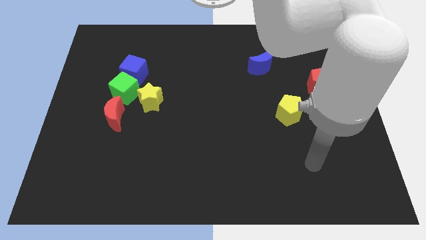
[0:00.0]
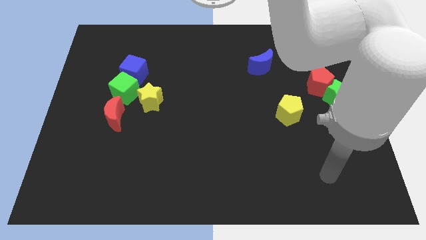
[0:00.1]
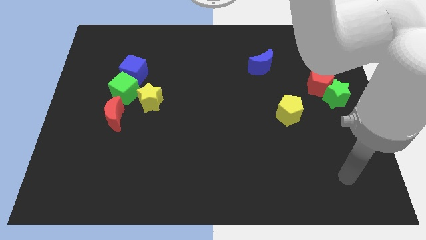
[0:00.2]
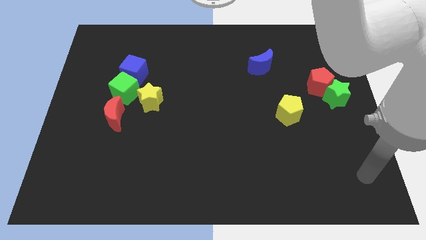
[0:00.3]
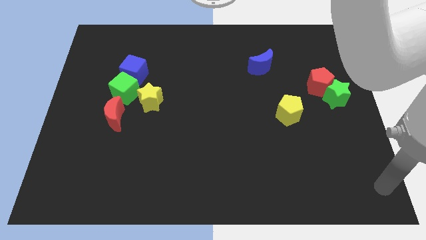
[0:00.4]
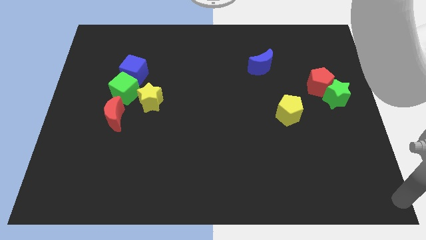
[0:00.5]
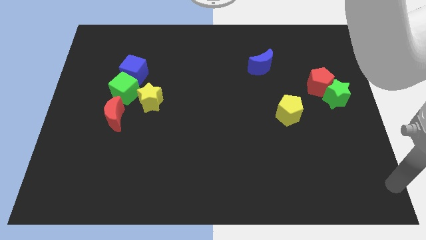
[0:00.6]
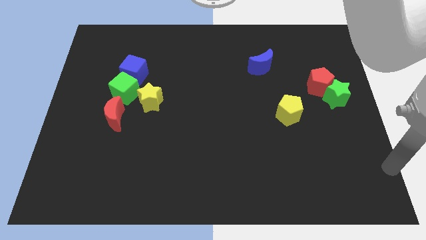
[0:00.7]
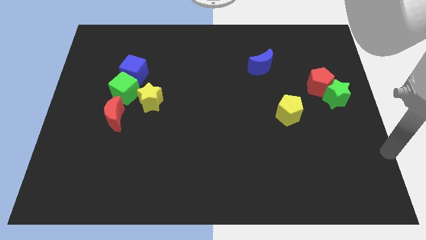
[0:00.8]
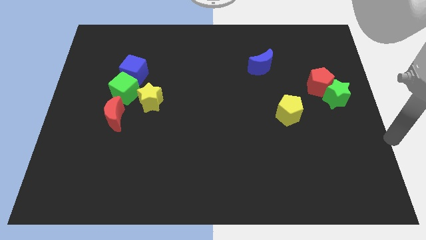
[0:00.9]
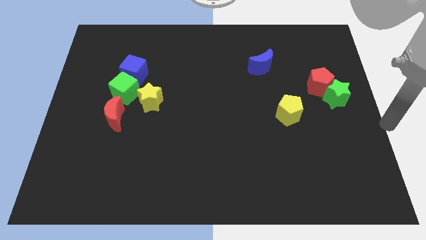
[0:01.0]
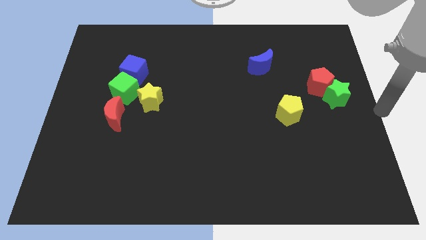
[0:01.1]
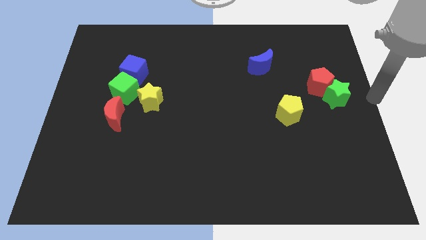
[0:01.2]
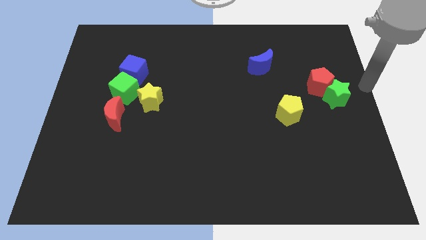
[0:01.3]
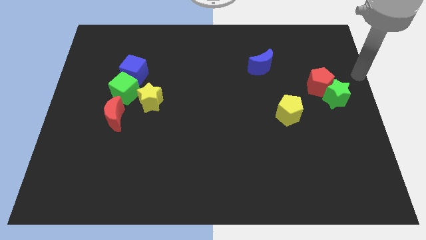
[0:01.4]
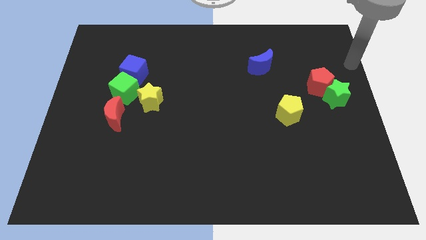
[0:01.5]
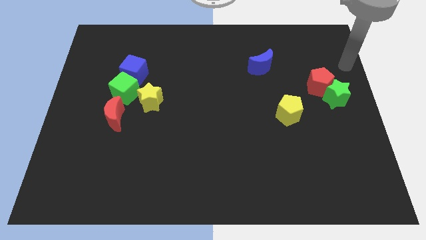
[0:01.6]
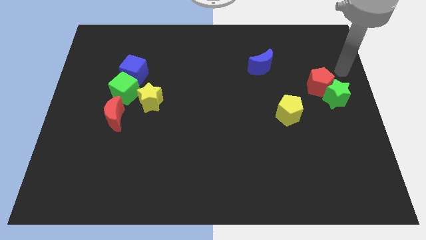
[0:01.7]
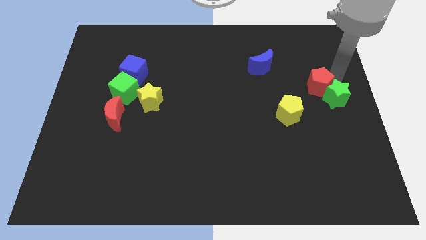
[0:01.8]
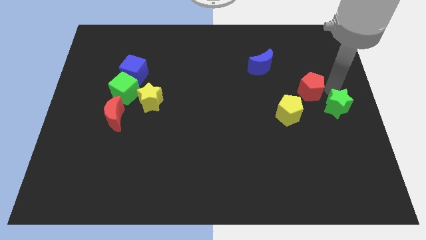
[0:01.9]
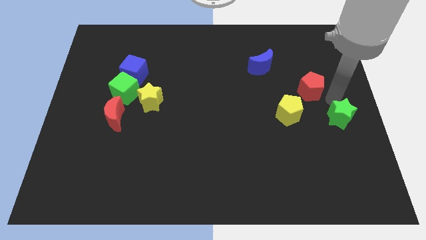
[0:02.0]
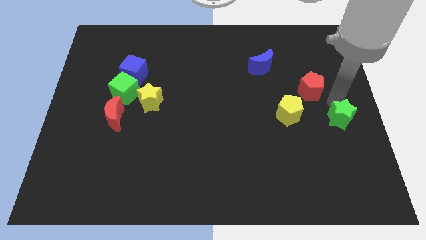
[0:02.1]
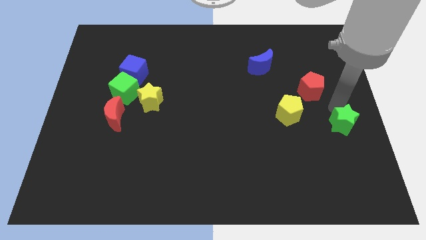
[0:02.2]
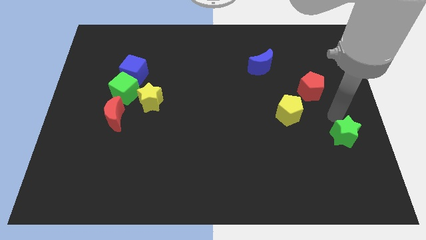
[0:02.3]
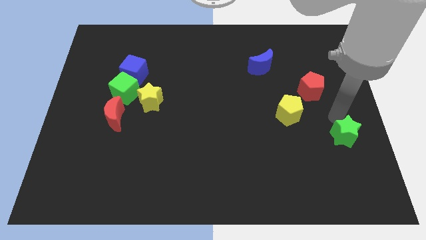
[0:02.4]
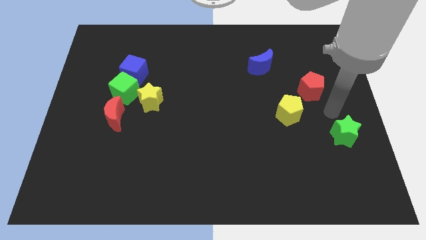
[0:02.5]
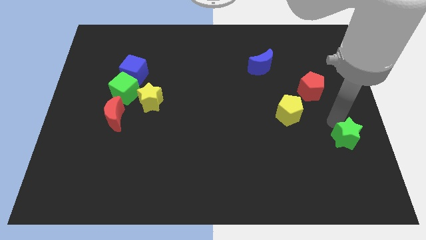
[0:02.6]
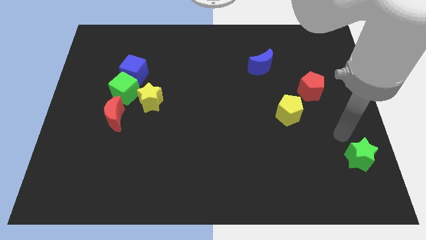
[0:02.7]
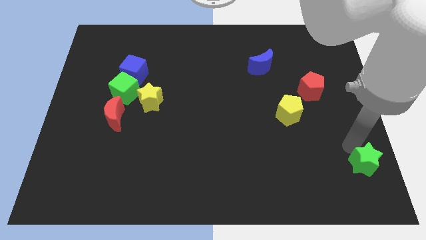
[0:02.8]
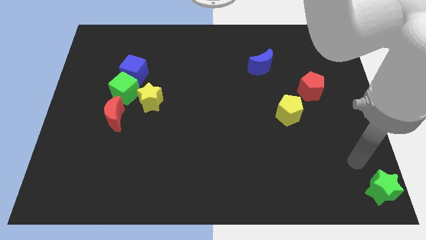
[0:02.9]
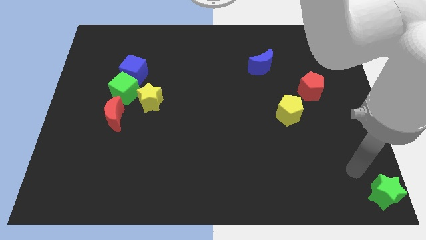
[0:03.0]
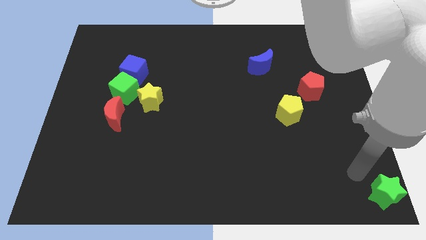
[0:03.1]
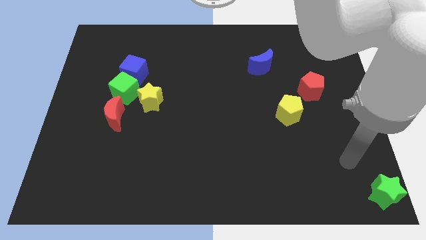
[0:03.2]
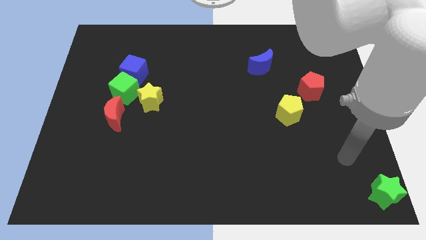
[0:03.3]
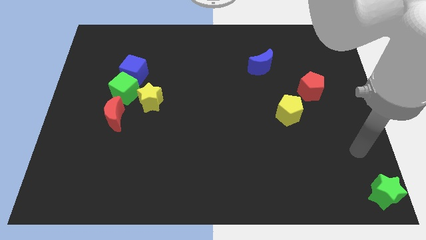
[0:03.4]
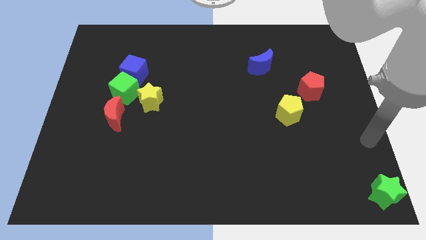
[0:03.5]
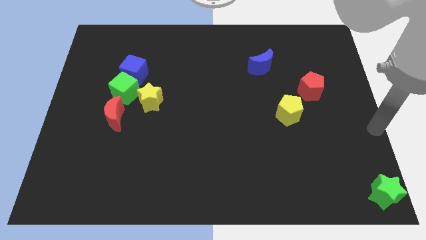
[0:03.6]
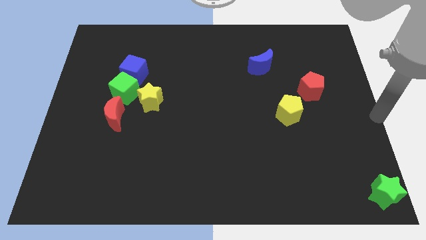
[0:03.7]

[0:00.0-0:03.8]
push the green star towards the bottom right corner of the board

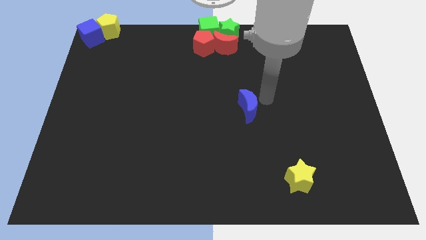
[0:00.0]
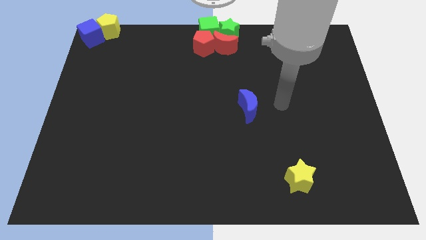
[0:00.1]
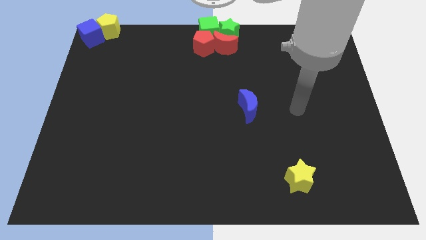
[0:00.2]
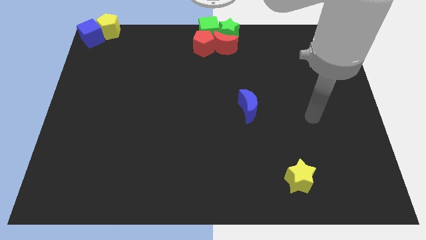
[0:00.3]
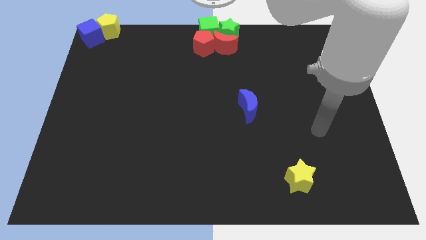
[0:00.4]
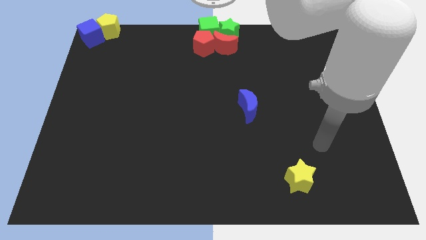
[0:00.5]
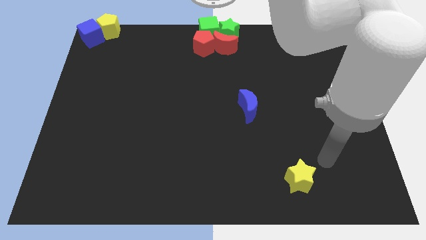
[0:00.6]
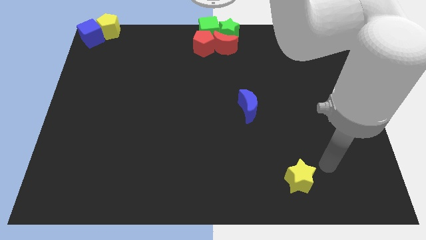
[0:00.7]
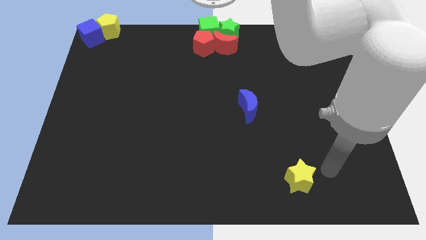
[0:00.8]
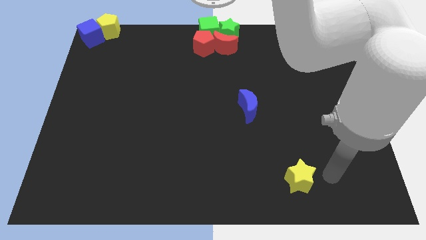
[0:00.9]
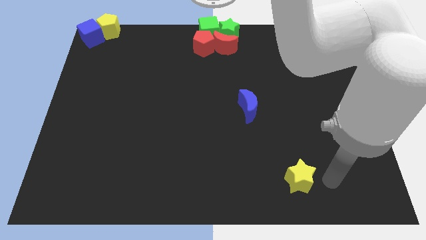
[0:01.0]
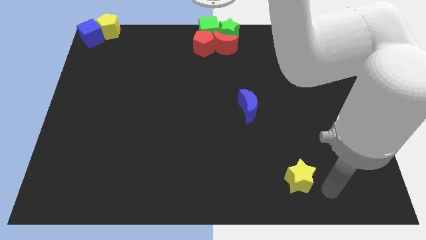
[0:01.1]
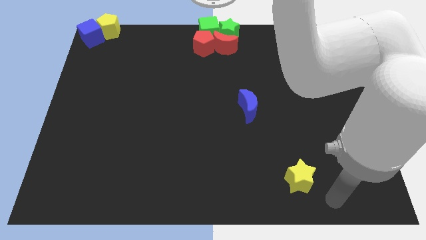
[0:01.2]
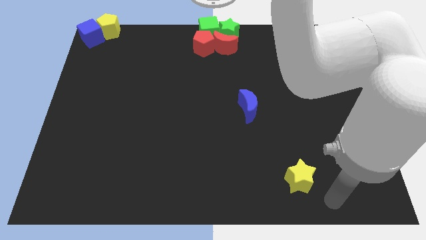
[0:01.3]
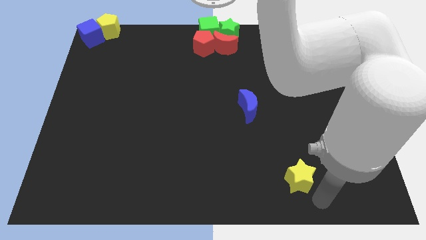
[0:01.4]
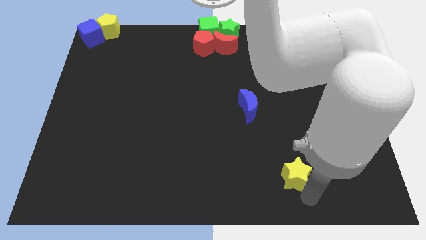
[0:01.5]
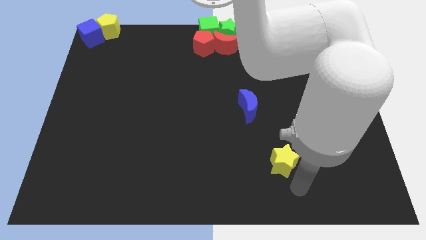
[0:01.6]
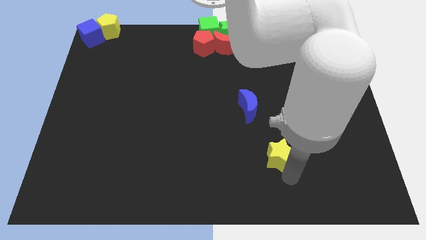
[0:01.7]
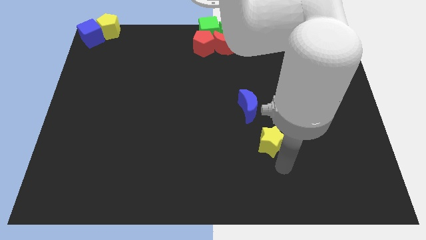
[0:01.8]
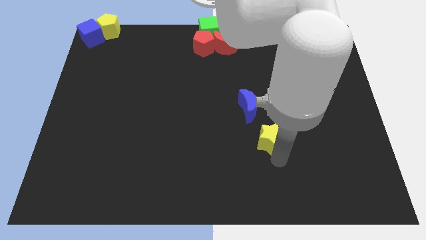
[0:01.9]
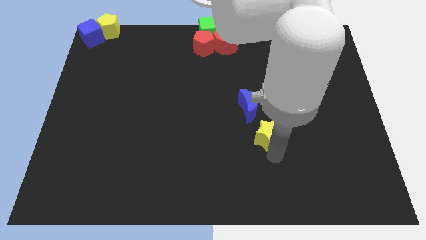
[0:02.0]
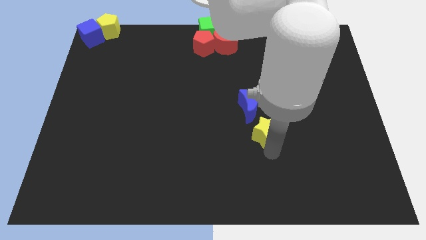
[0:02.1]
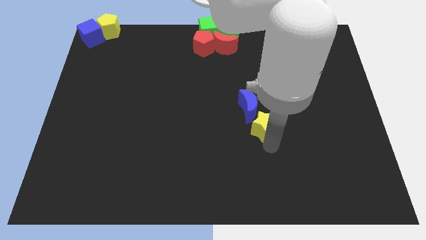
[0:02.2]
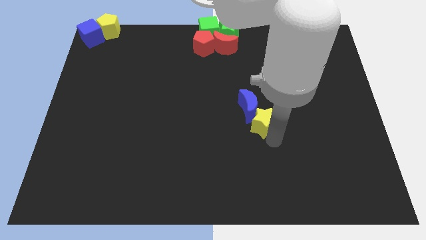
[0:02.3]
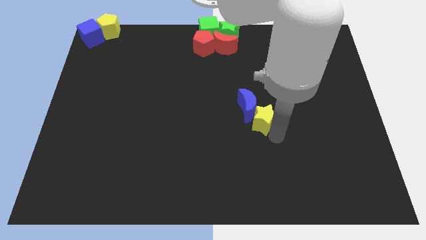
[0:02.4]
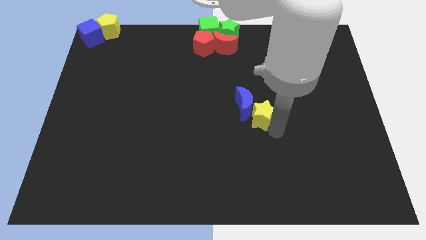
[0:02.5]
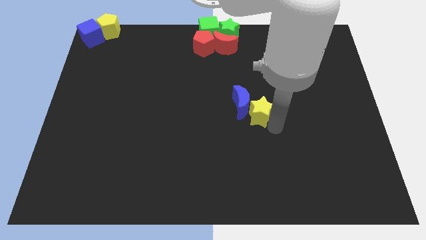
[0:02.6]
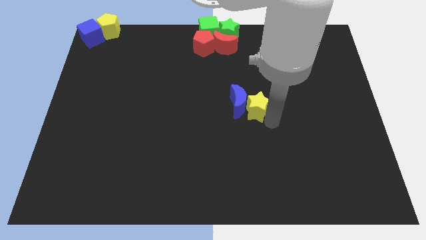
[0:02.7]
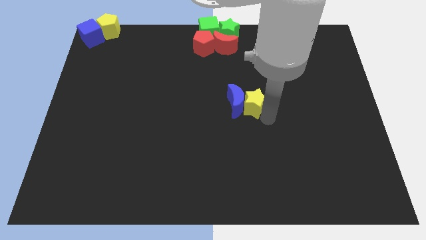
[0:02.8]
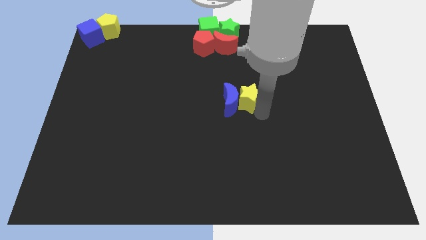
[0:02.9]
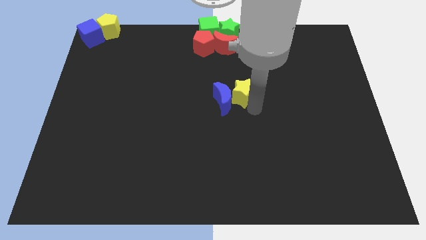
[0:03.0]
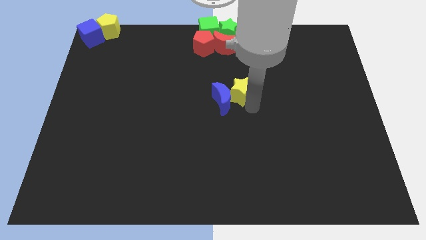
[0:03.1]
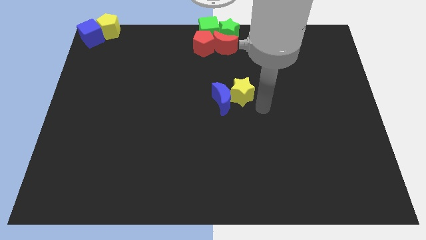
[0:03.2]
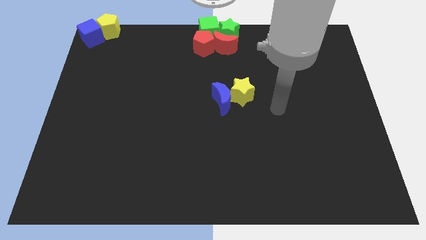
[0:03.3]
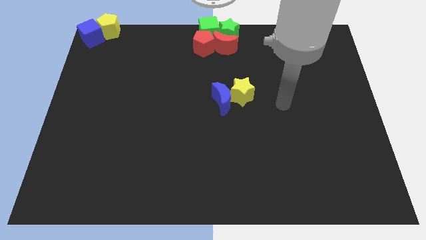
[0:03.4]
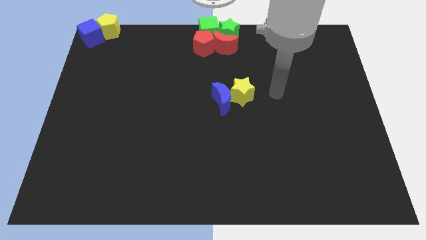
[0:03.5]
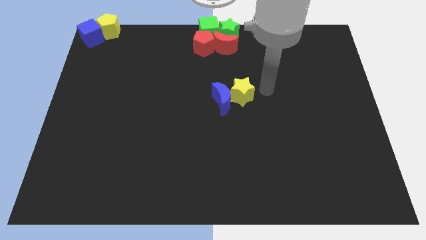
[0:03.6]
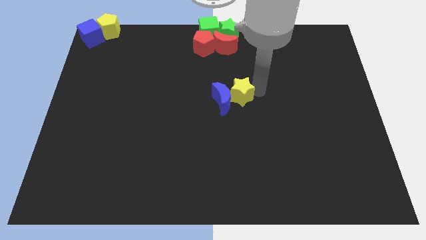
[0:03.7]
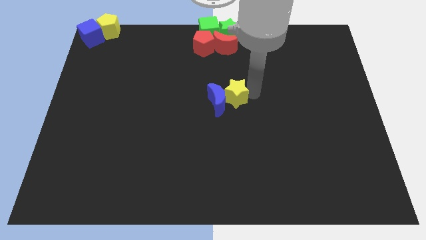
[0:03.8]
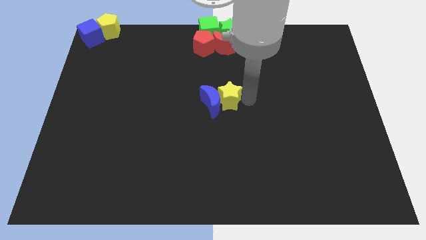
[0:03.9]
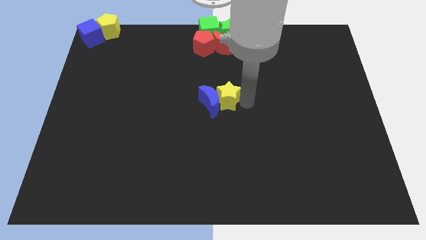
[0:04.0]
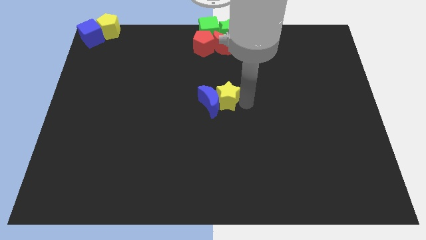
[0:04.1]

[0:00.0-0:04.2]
move the yellow star and blue crescent to the center of the board

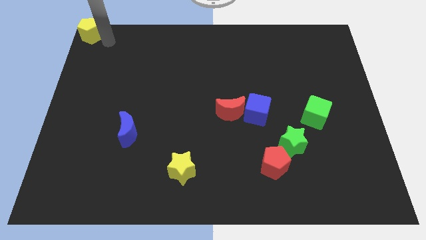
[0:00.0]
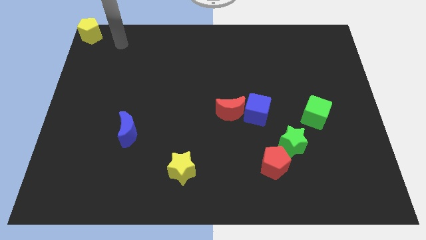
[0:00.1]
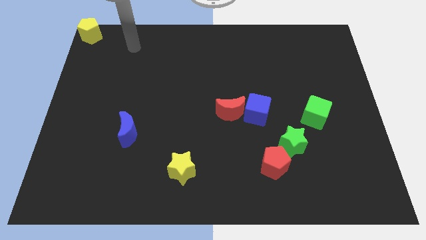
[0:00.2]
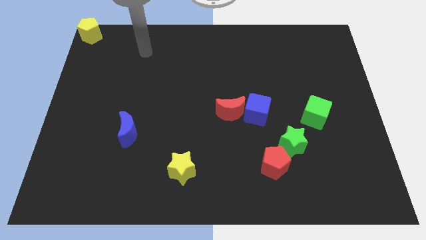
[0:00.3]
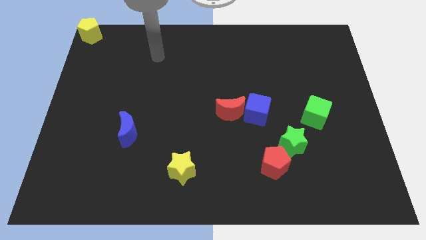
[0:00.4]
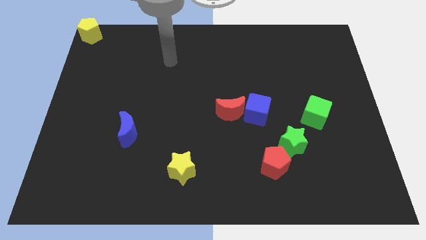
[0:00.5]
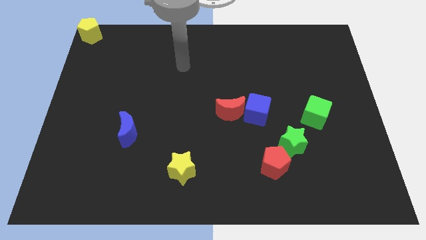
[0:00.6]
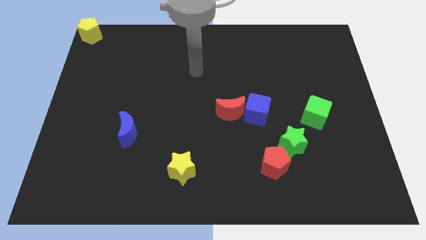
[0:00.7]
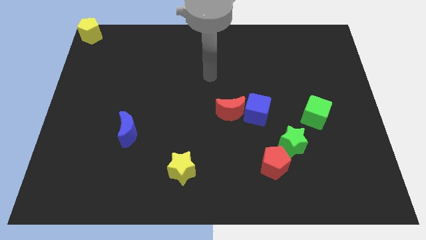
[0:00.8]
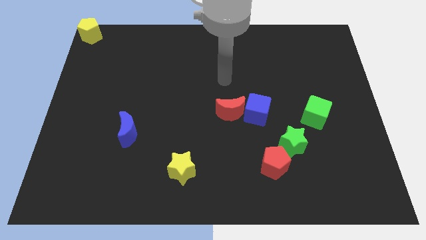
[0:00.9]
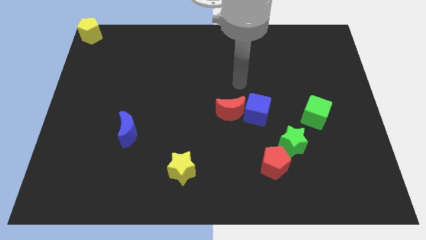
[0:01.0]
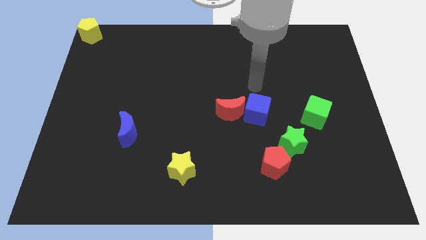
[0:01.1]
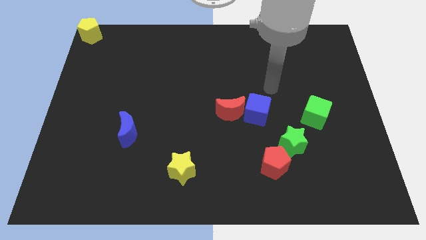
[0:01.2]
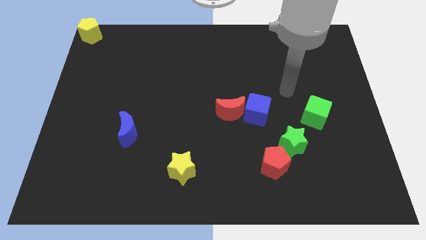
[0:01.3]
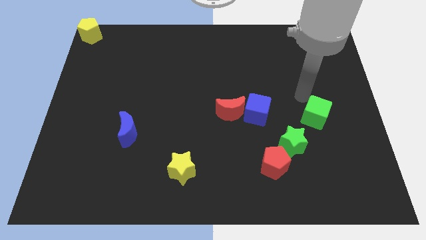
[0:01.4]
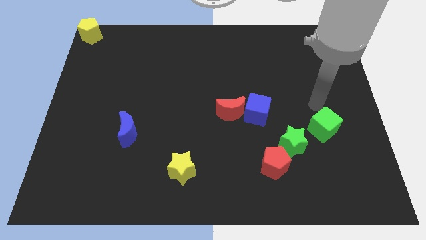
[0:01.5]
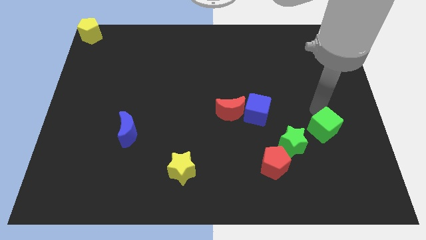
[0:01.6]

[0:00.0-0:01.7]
place the arm above the green cube
